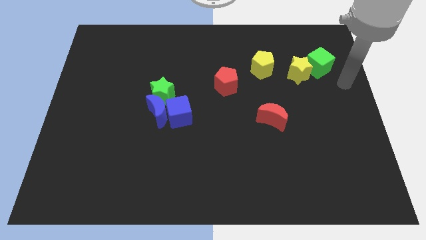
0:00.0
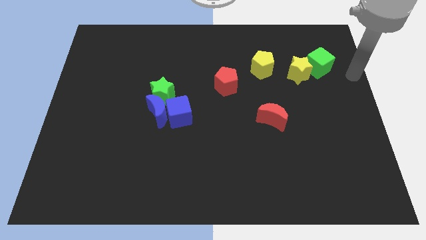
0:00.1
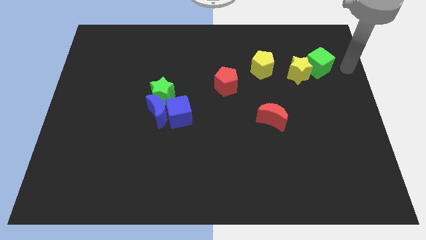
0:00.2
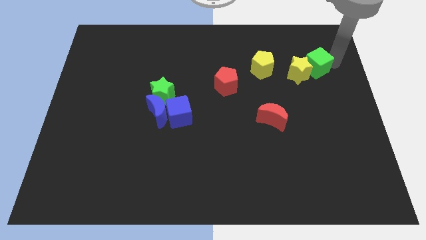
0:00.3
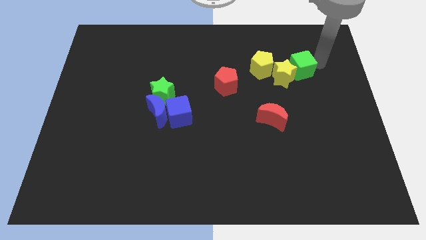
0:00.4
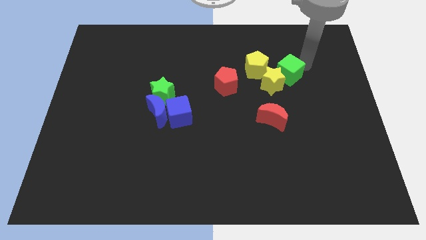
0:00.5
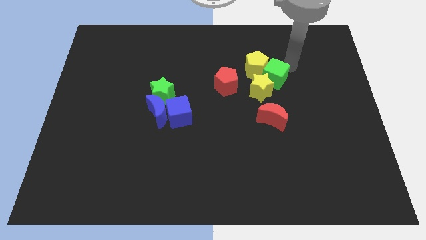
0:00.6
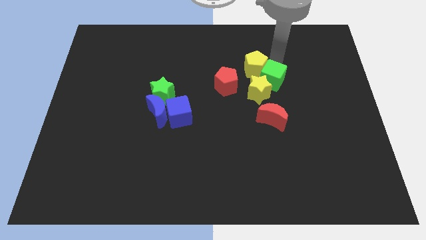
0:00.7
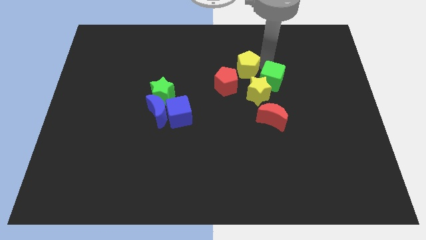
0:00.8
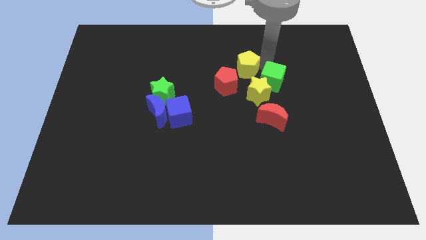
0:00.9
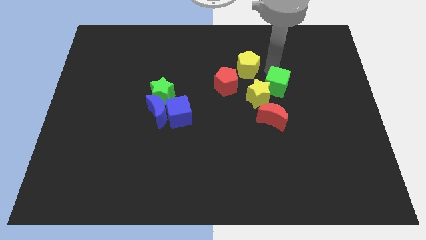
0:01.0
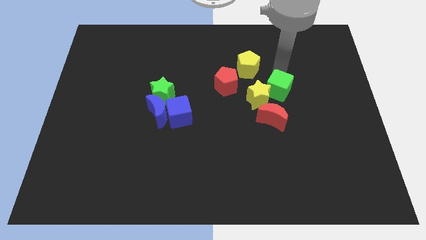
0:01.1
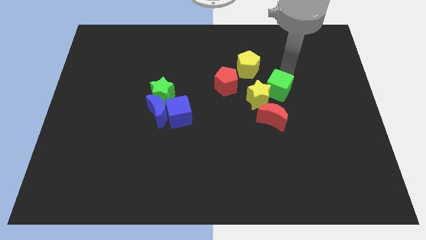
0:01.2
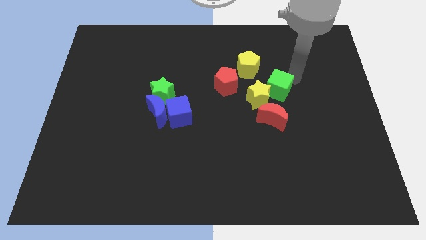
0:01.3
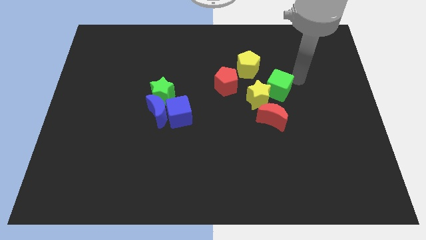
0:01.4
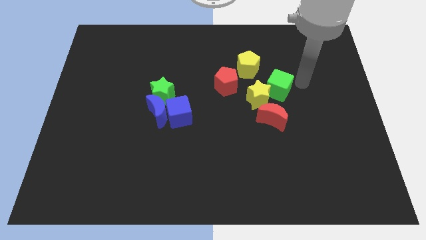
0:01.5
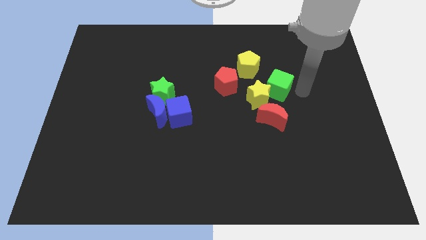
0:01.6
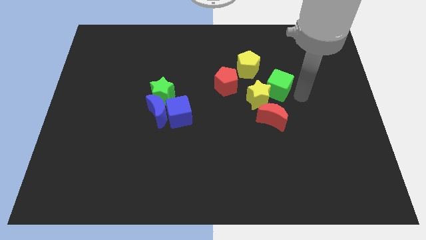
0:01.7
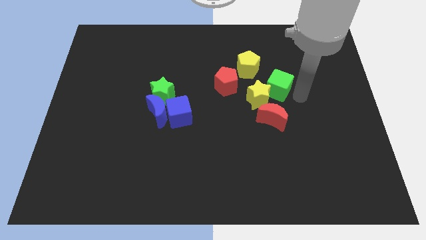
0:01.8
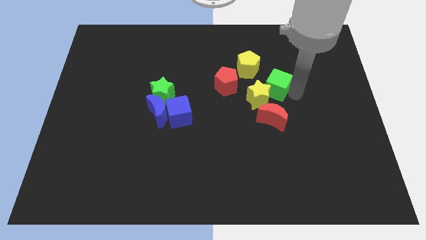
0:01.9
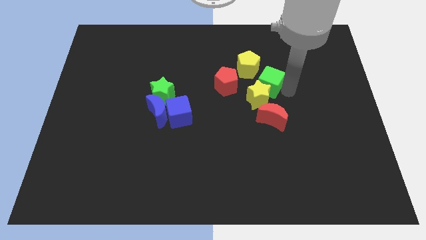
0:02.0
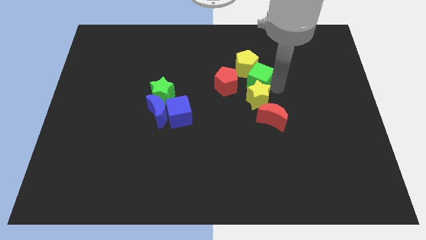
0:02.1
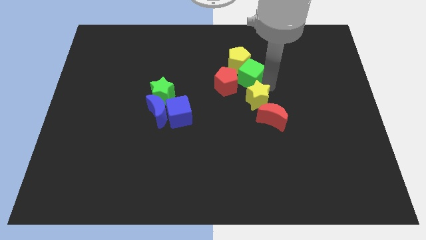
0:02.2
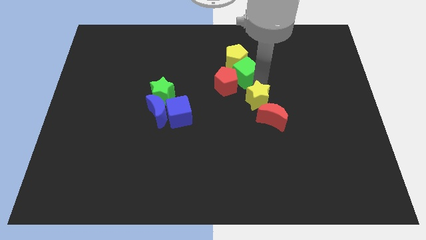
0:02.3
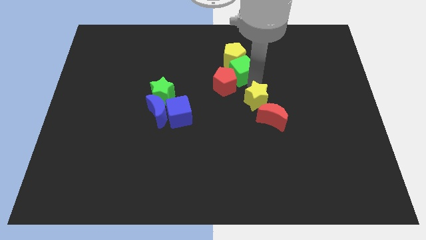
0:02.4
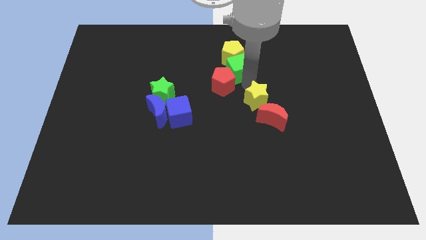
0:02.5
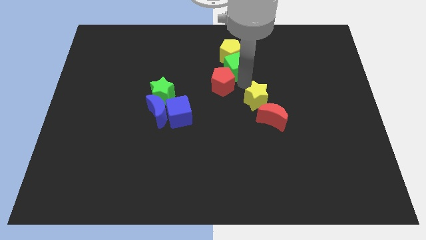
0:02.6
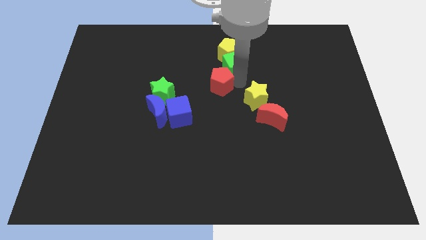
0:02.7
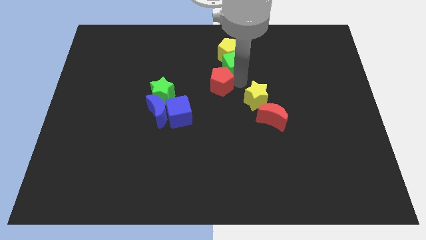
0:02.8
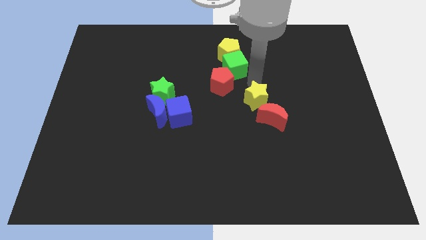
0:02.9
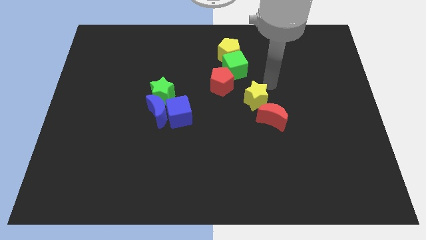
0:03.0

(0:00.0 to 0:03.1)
push the green cube and yellow star and move the cube between red and yellow pentagon

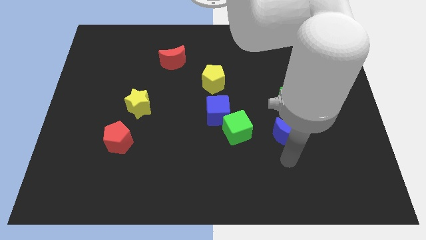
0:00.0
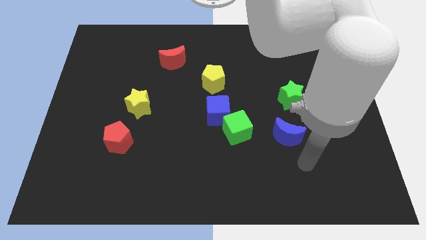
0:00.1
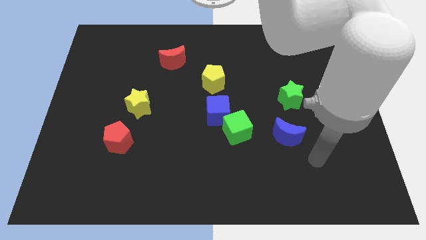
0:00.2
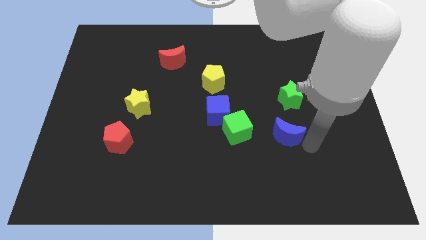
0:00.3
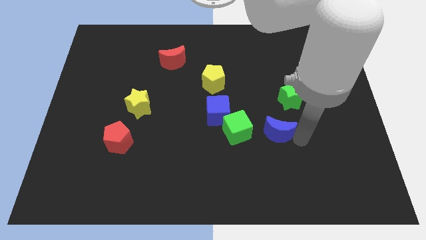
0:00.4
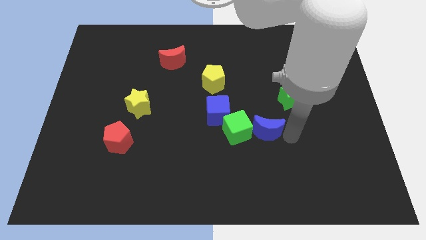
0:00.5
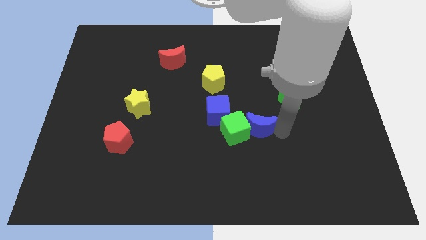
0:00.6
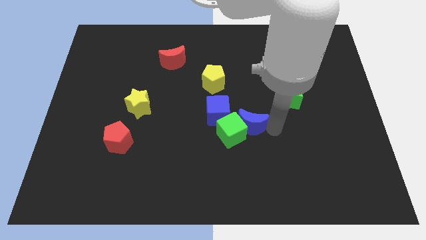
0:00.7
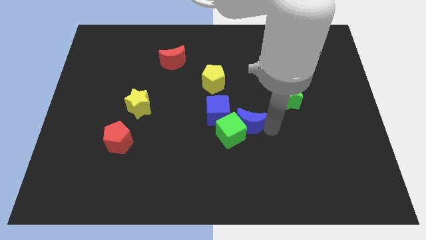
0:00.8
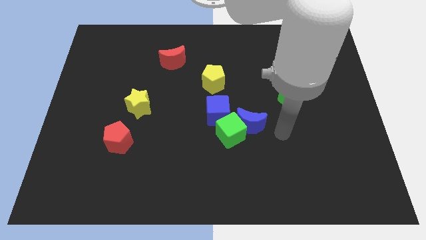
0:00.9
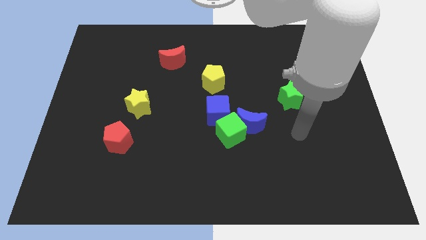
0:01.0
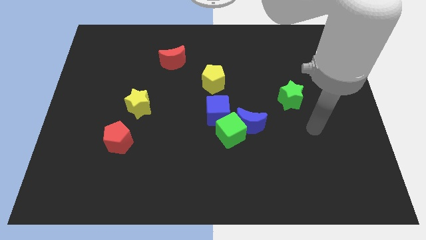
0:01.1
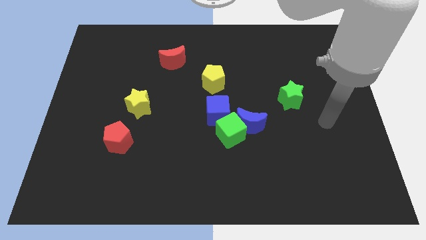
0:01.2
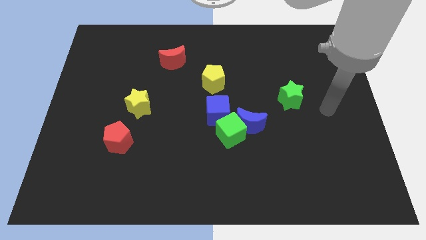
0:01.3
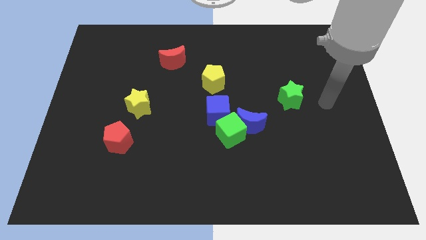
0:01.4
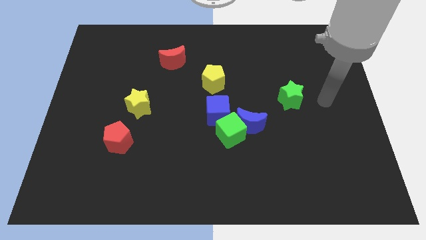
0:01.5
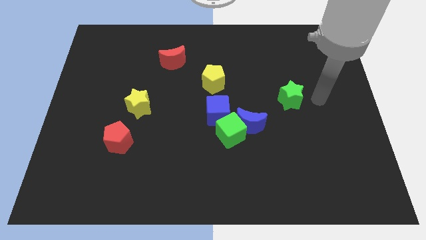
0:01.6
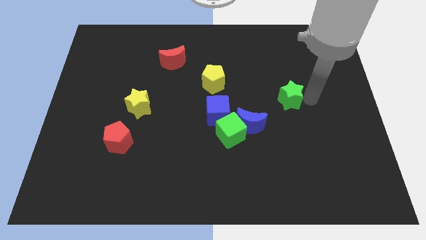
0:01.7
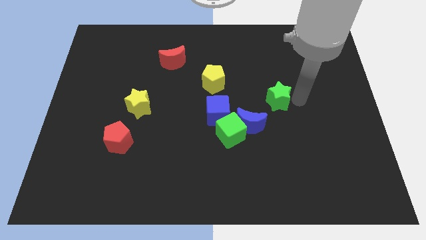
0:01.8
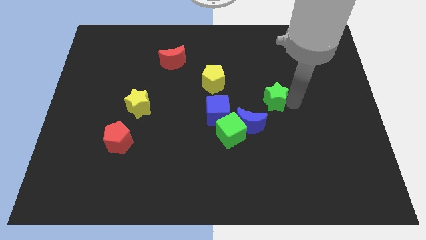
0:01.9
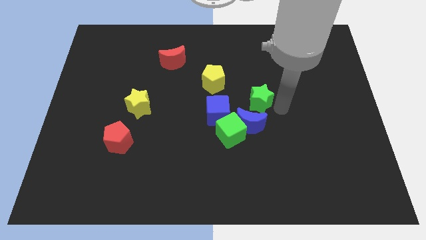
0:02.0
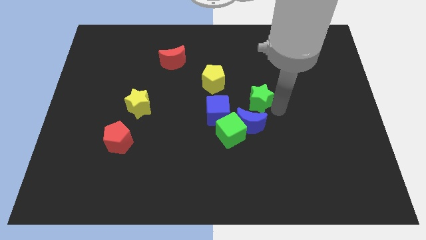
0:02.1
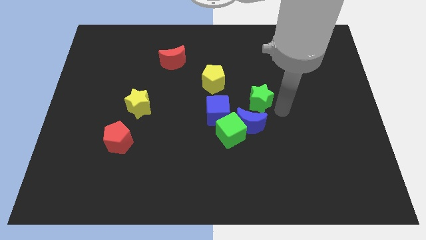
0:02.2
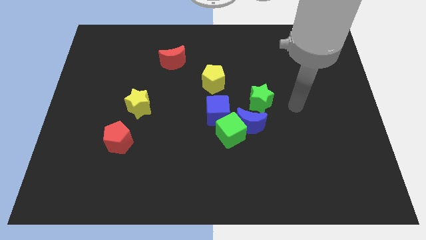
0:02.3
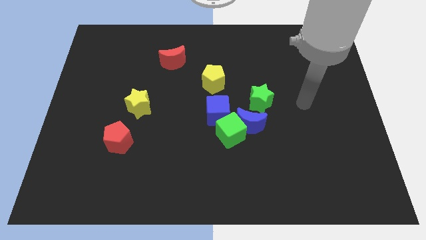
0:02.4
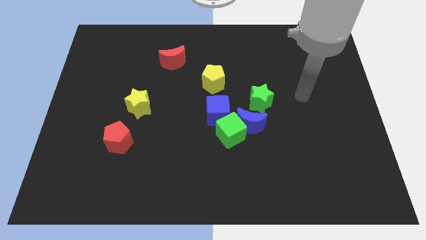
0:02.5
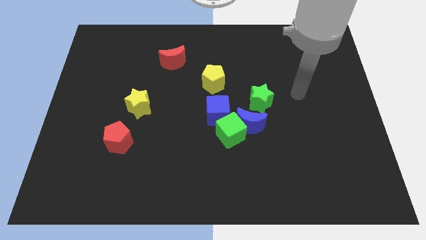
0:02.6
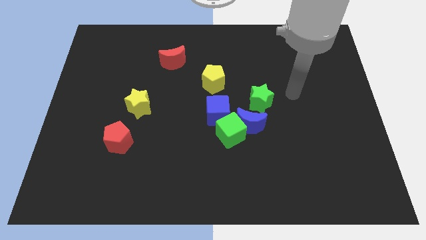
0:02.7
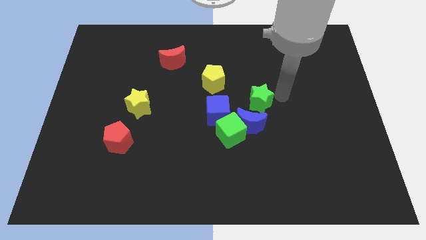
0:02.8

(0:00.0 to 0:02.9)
place green star above blue moon

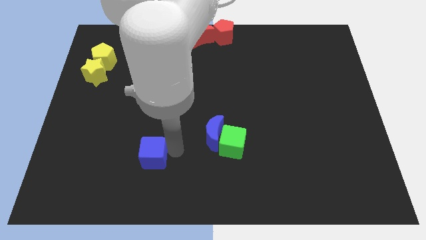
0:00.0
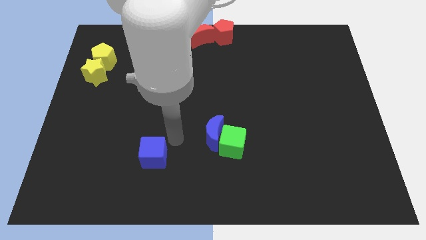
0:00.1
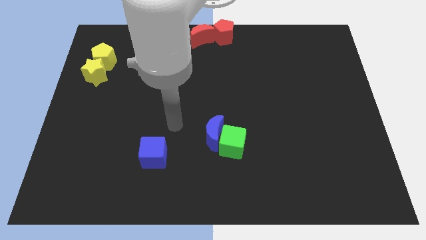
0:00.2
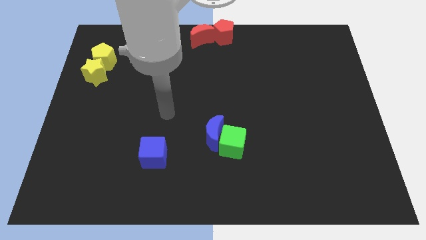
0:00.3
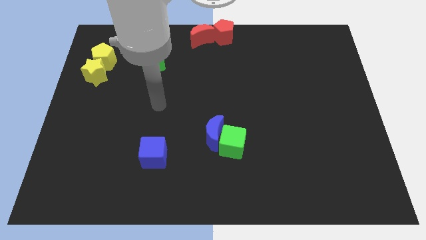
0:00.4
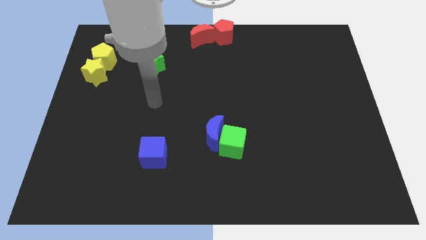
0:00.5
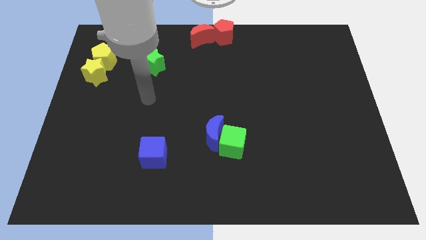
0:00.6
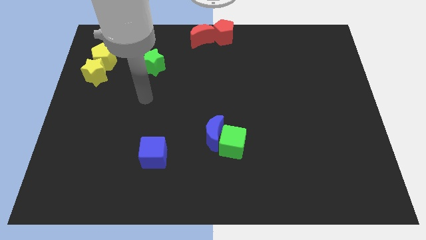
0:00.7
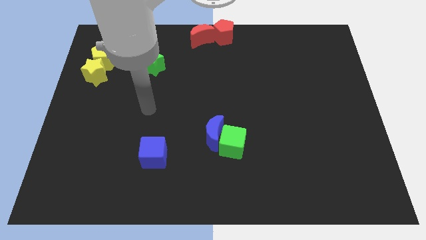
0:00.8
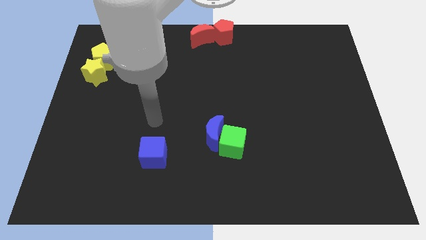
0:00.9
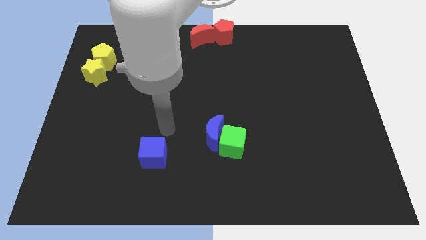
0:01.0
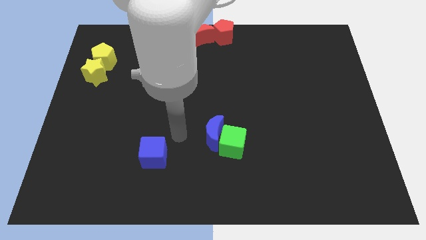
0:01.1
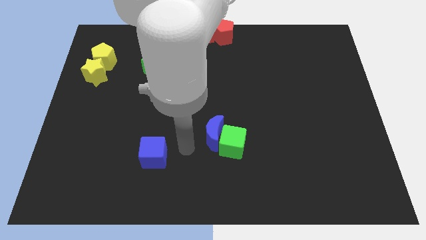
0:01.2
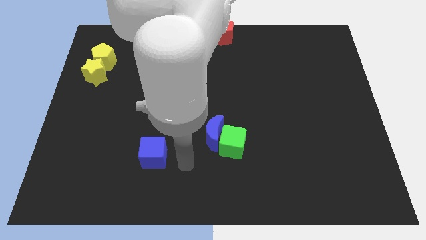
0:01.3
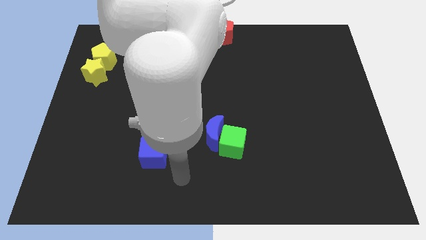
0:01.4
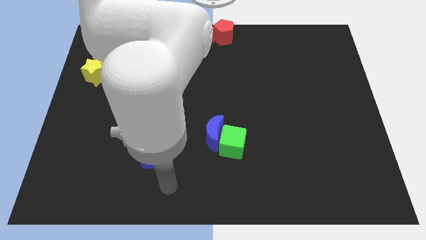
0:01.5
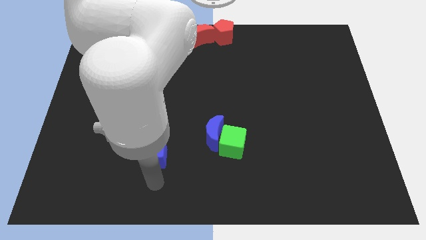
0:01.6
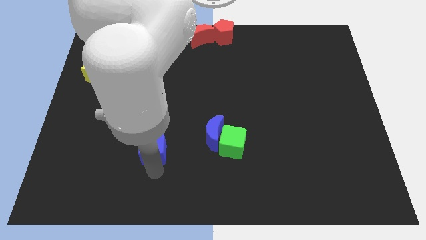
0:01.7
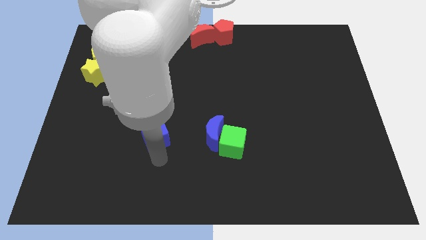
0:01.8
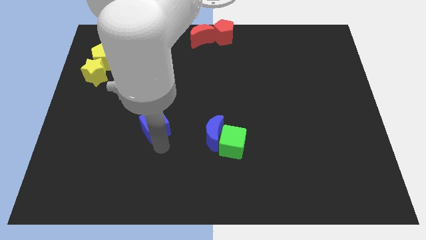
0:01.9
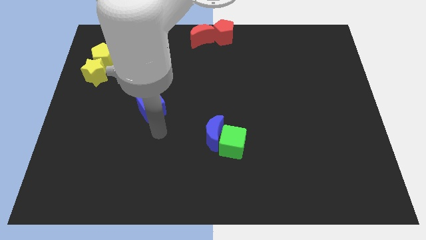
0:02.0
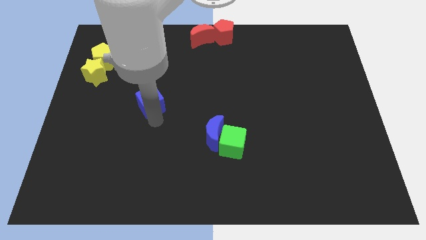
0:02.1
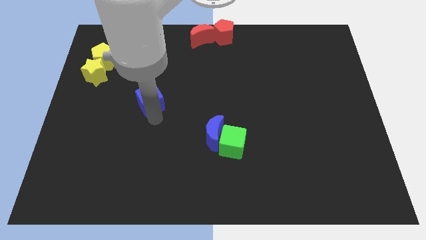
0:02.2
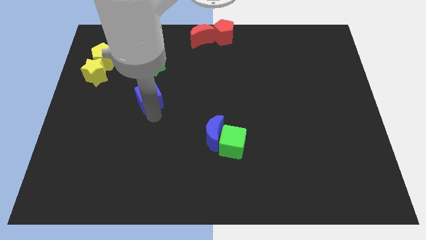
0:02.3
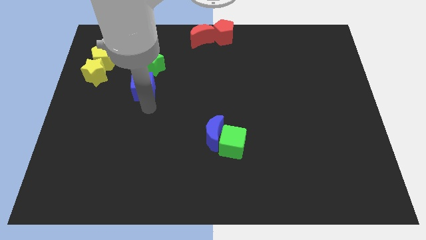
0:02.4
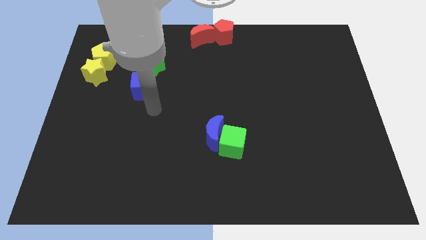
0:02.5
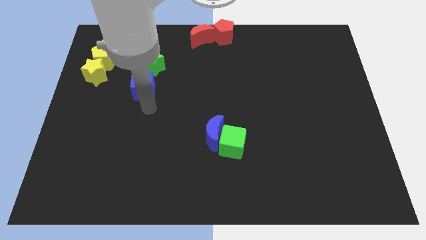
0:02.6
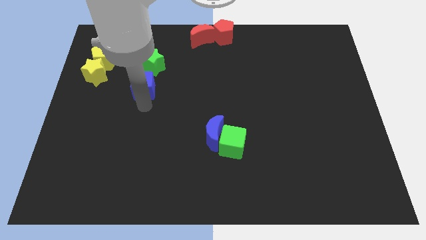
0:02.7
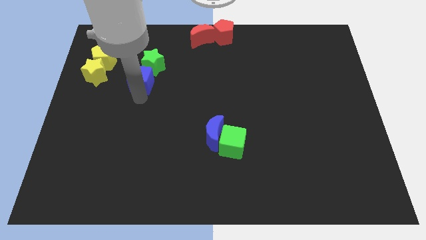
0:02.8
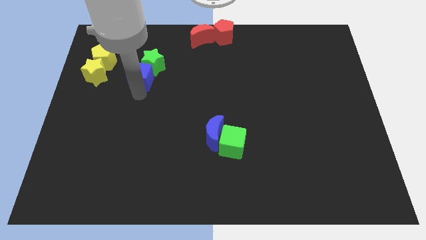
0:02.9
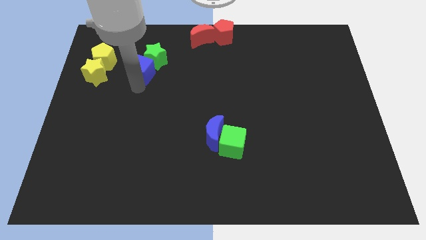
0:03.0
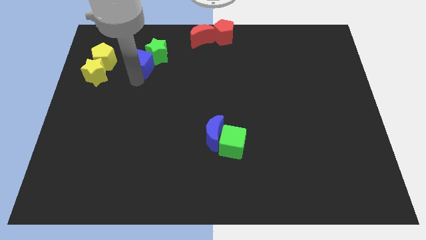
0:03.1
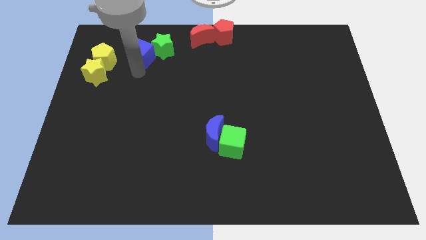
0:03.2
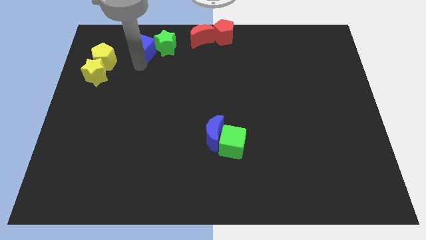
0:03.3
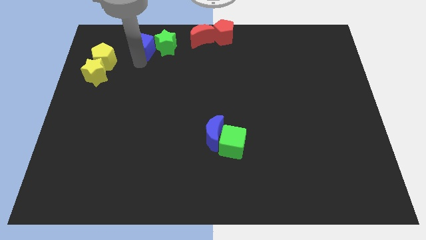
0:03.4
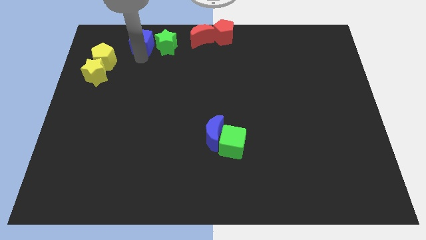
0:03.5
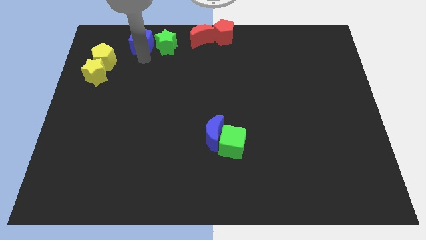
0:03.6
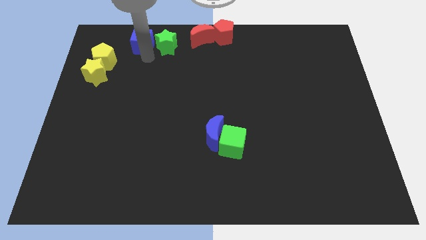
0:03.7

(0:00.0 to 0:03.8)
move the blue cube beside the green star
